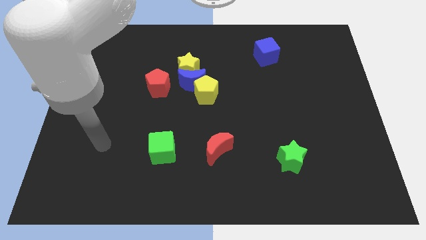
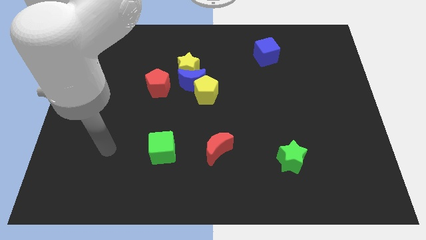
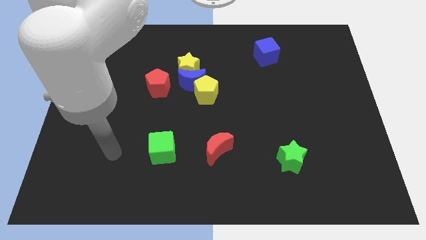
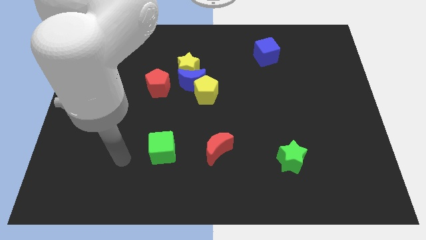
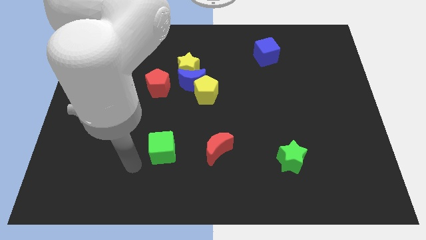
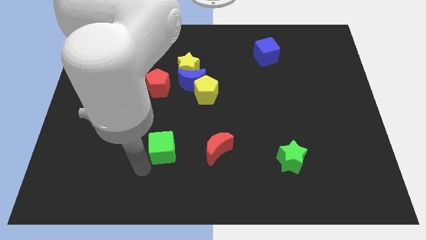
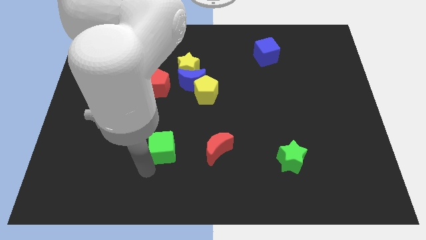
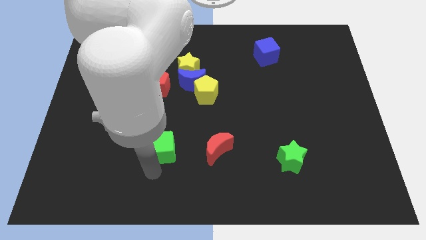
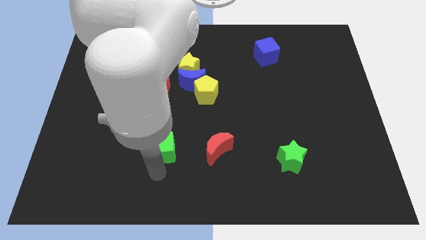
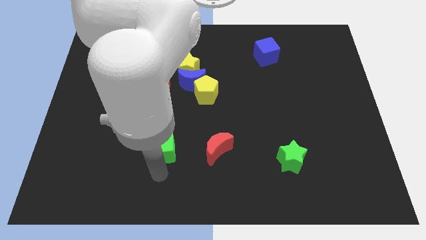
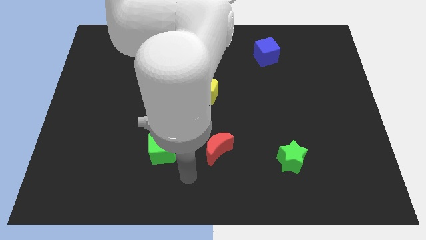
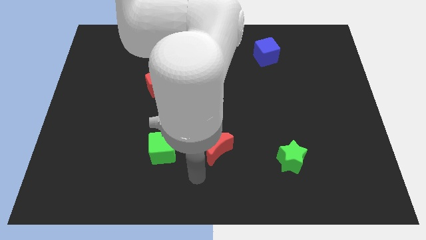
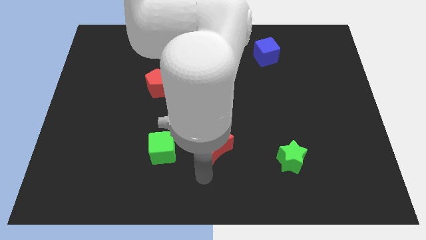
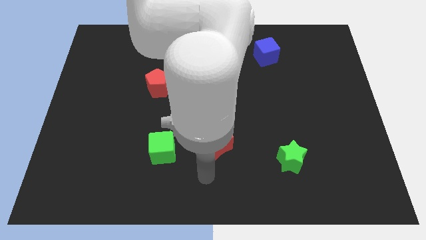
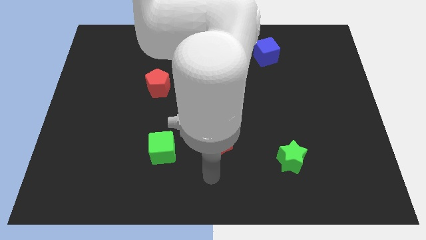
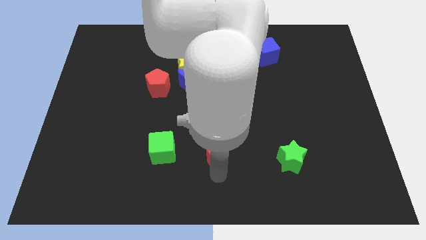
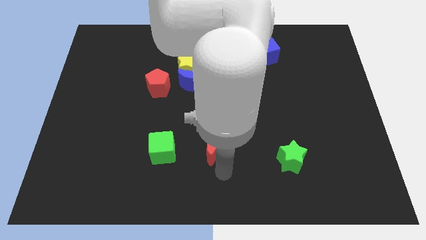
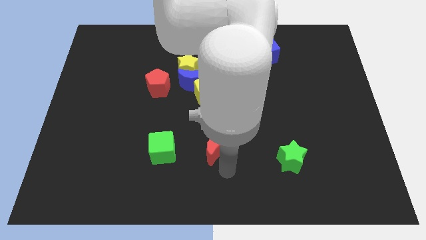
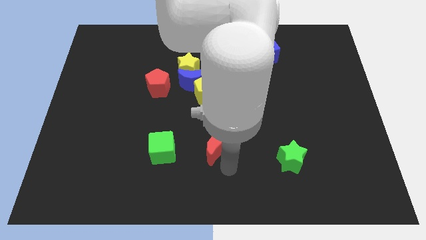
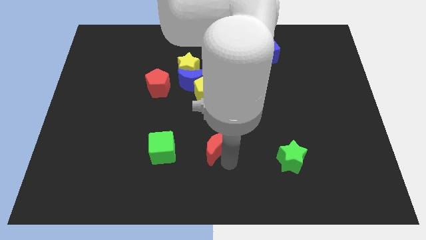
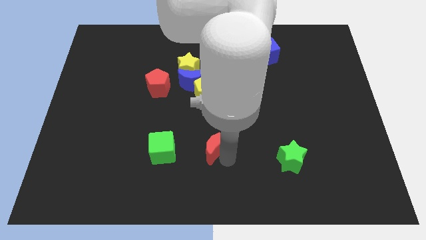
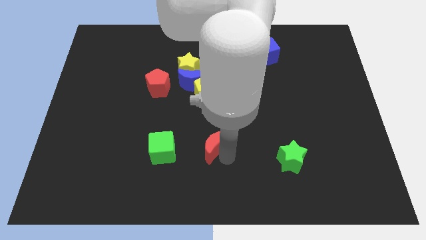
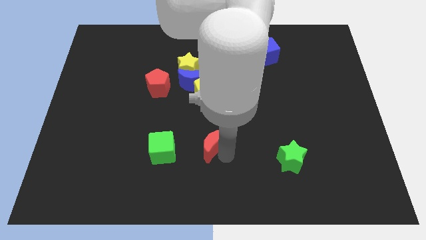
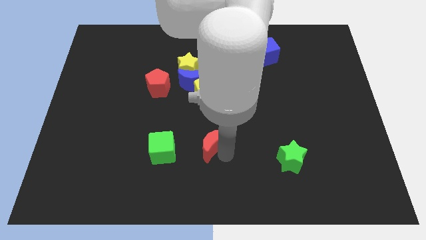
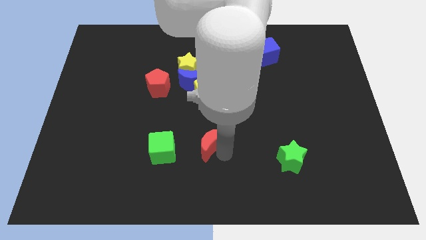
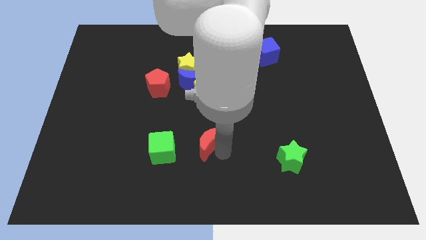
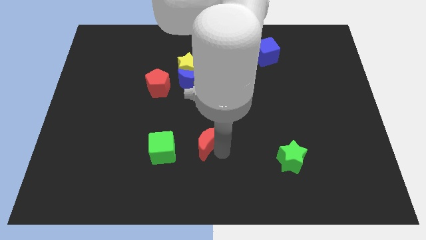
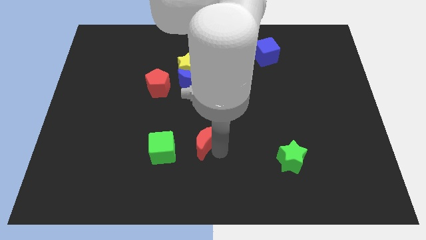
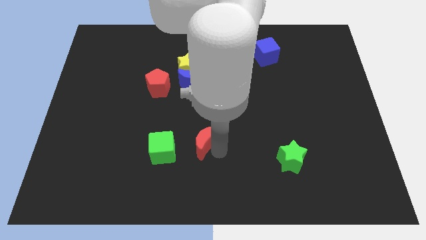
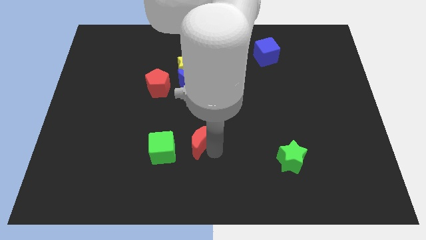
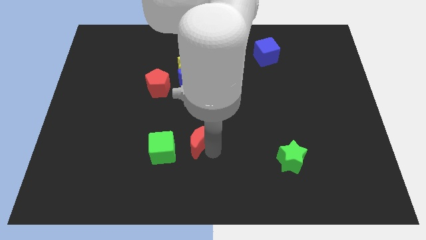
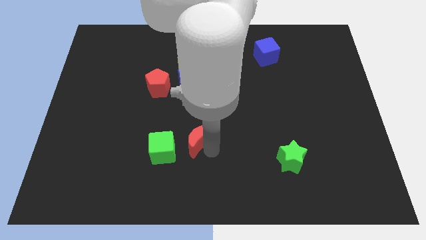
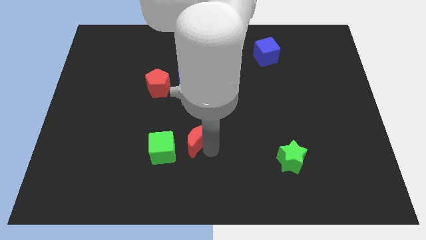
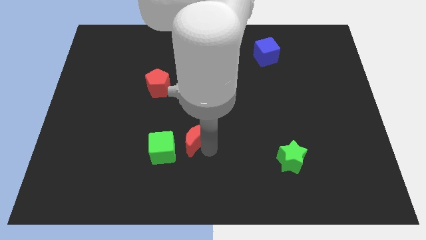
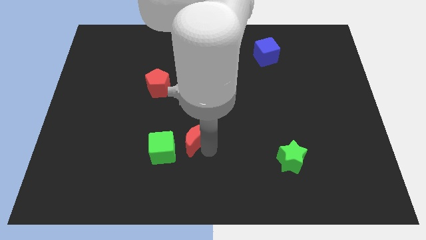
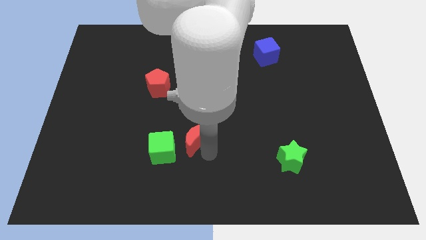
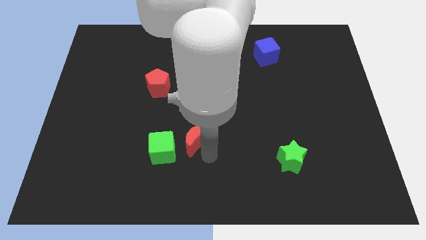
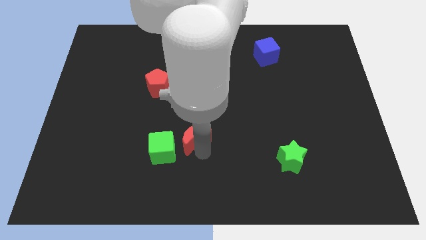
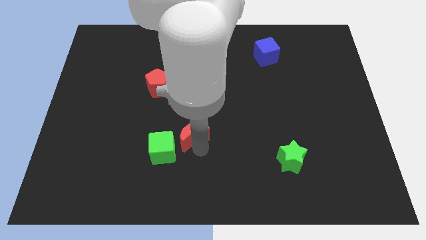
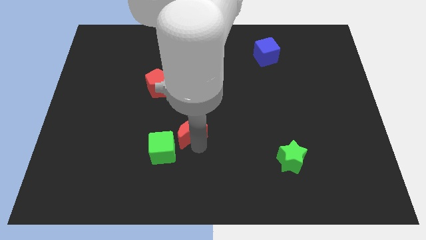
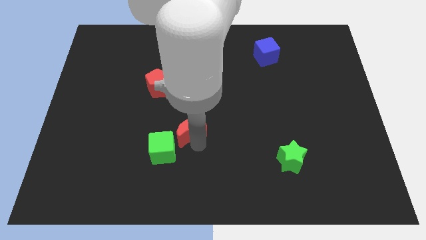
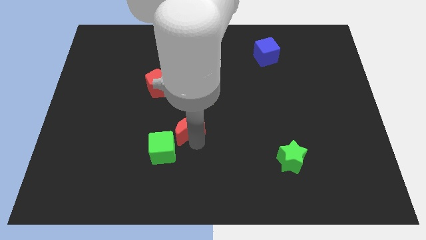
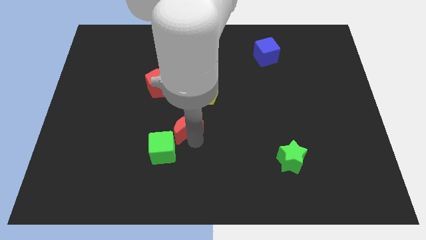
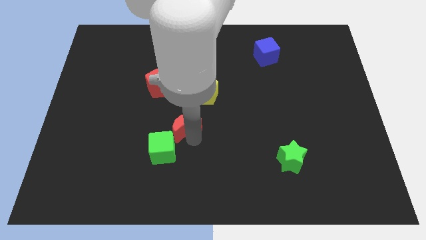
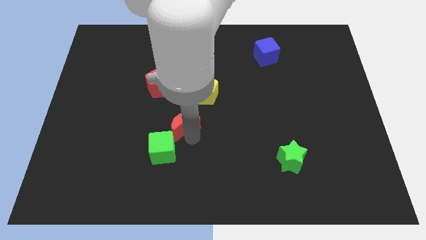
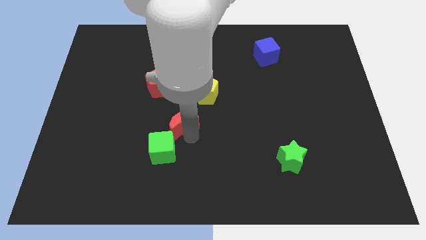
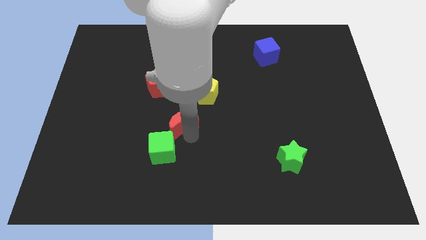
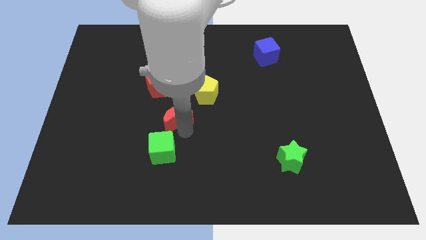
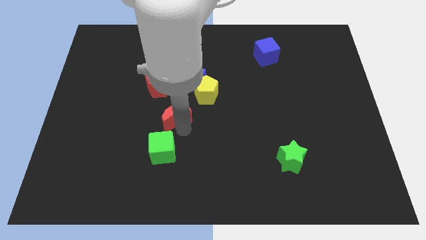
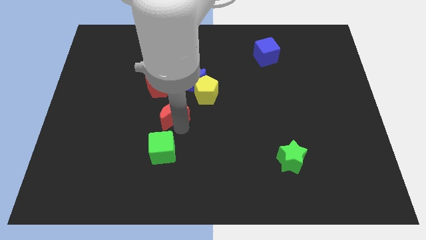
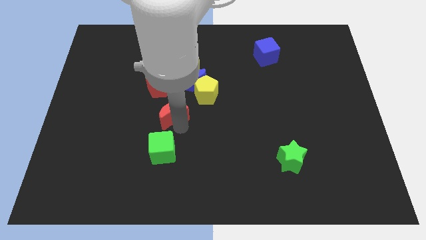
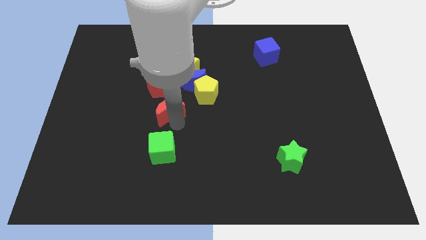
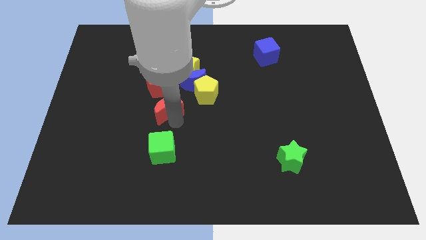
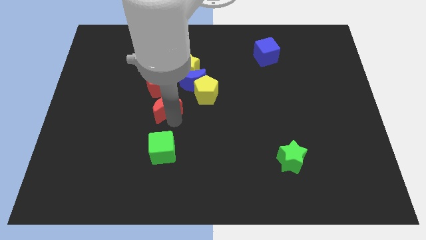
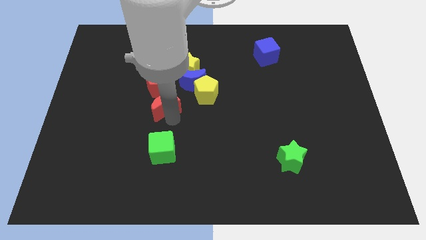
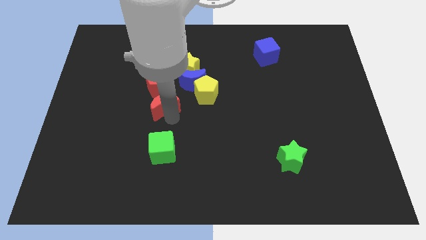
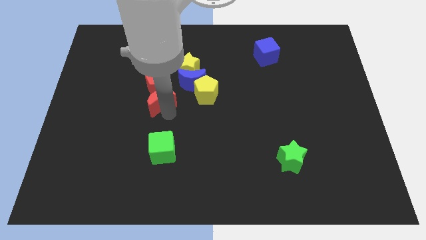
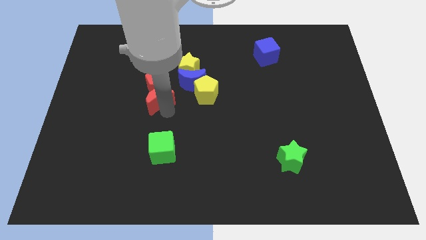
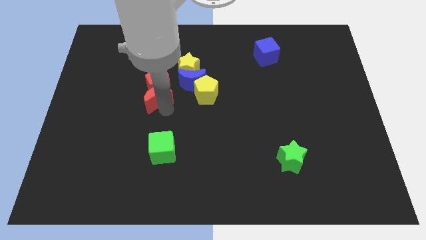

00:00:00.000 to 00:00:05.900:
put the red moon close to the red pentagon

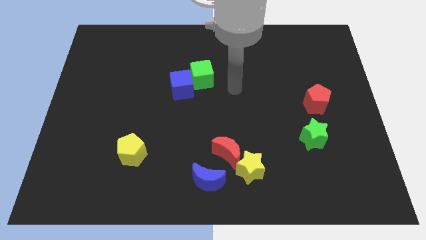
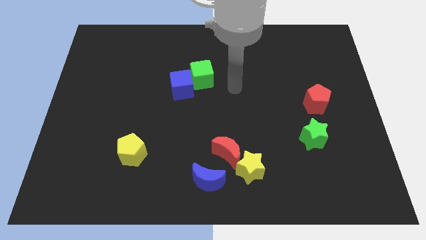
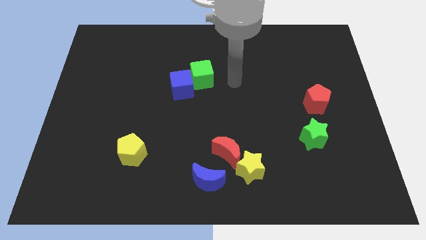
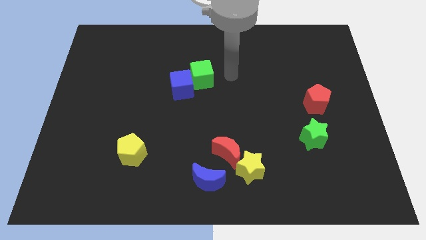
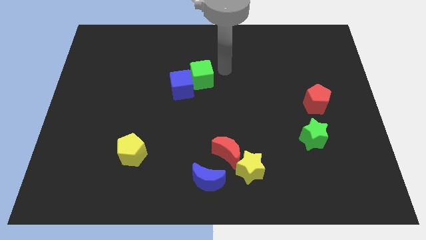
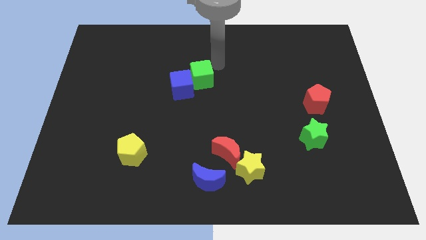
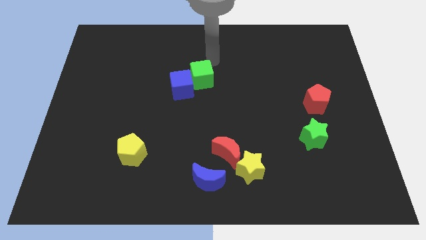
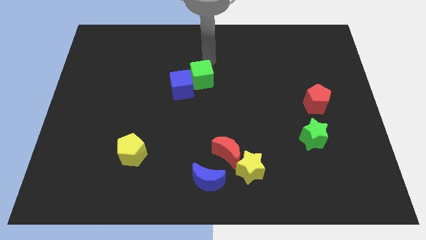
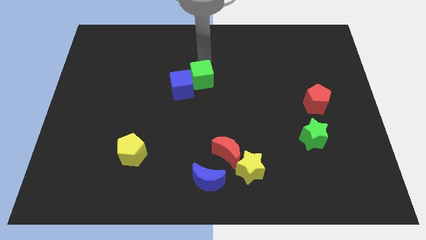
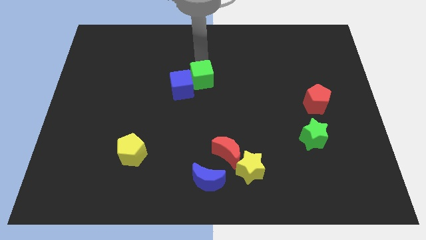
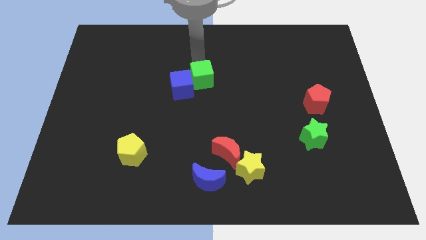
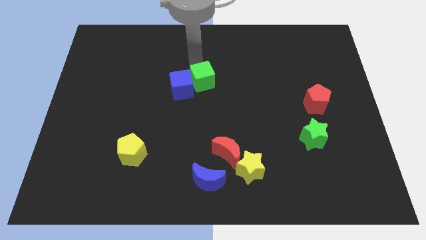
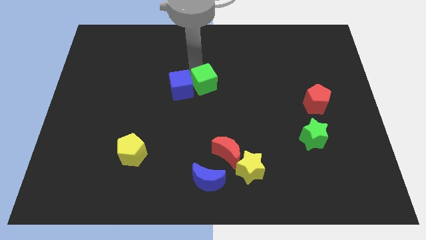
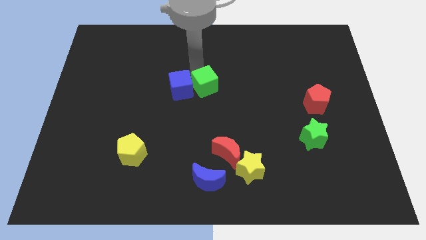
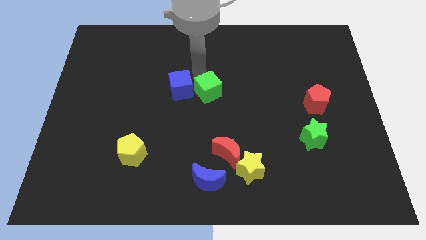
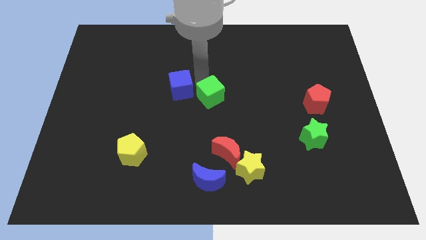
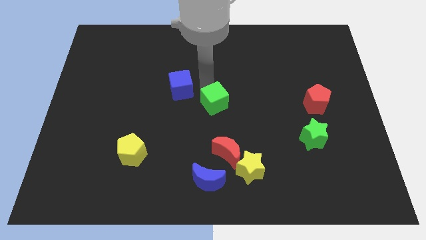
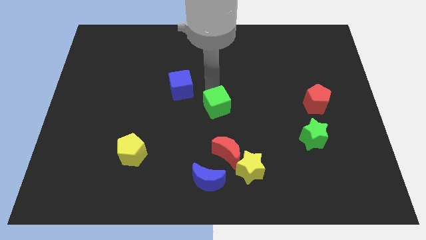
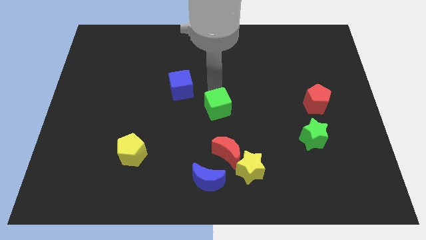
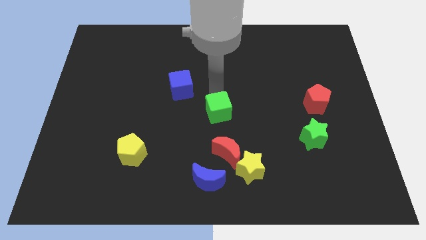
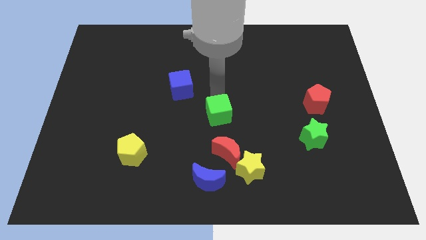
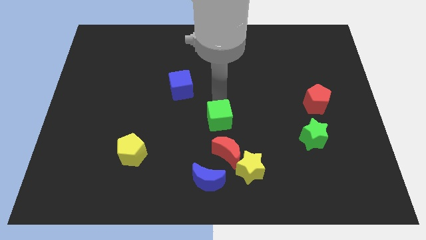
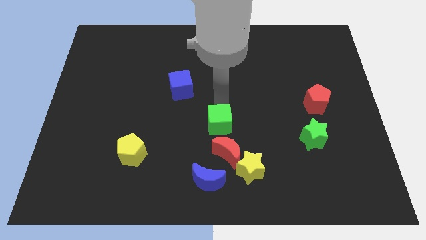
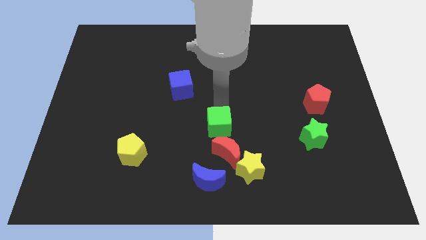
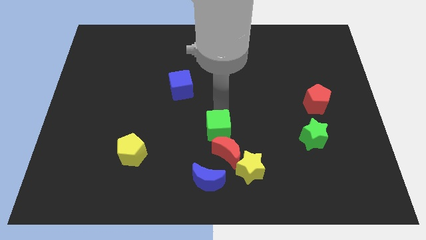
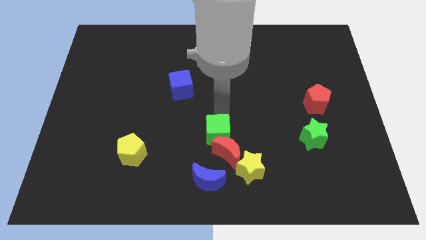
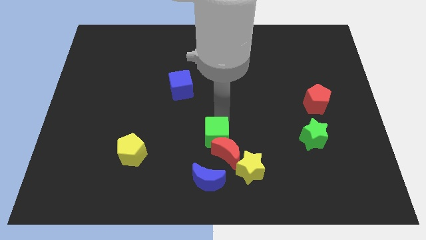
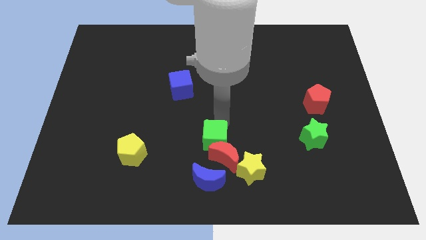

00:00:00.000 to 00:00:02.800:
push the green cube close to the red moon
